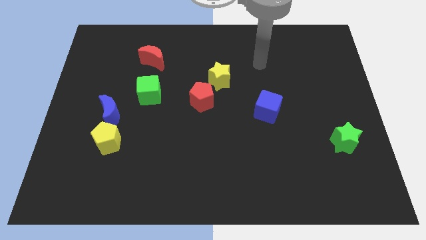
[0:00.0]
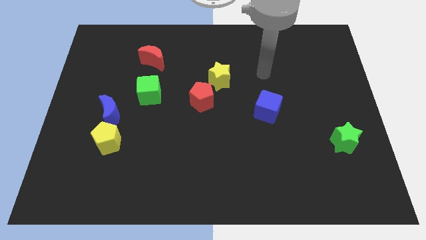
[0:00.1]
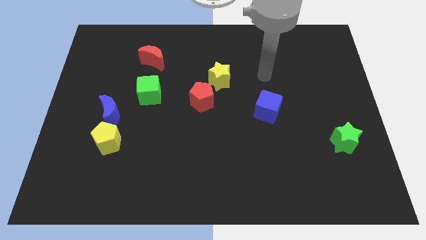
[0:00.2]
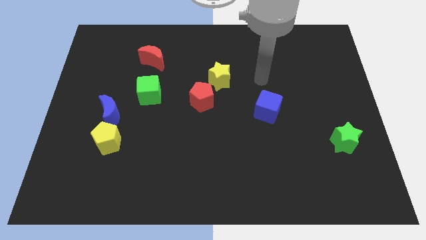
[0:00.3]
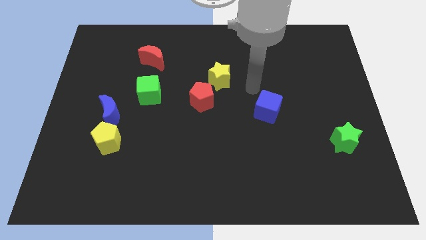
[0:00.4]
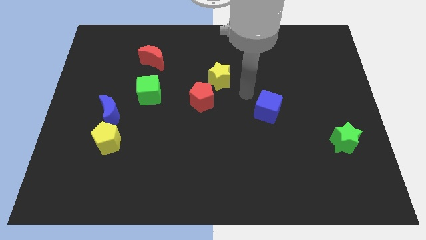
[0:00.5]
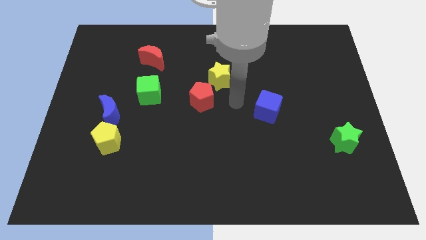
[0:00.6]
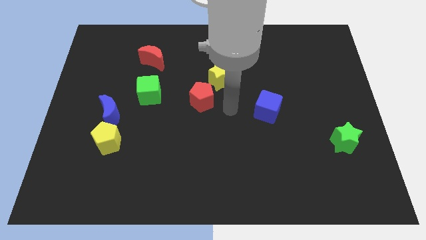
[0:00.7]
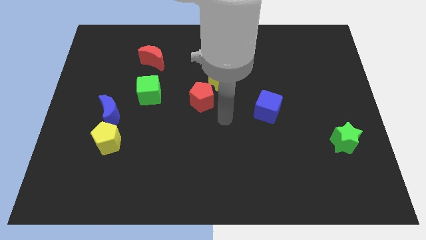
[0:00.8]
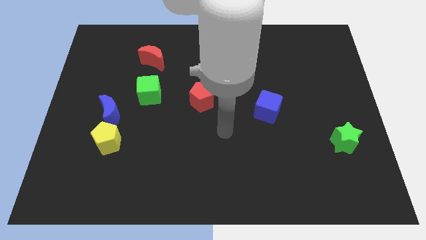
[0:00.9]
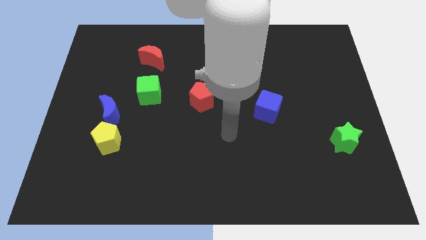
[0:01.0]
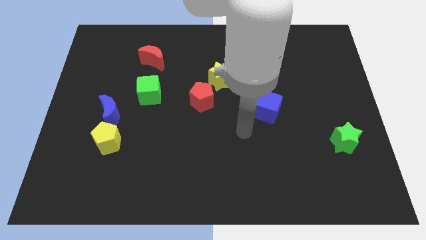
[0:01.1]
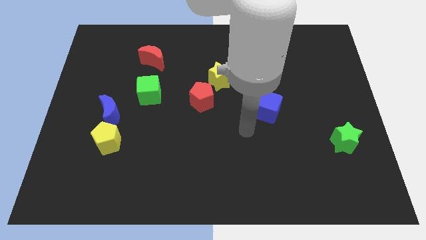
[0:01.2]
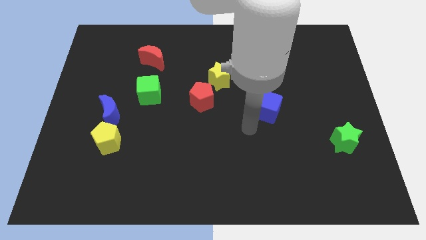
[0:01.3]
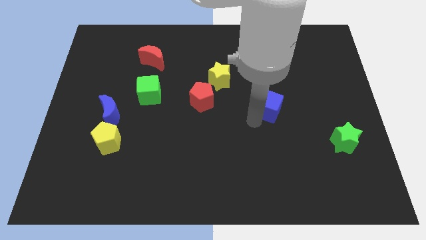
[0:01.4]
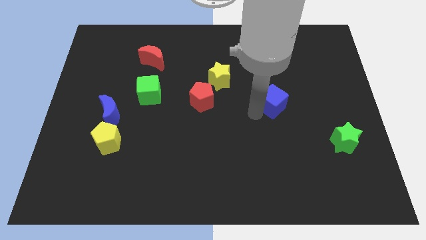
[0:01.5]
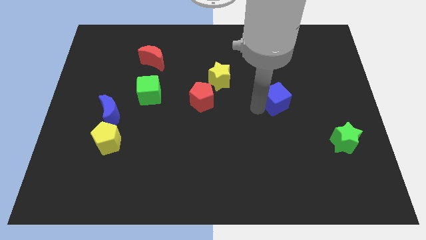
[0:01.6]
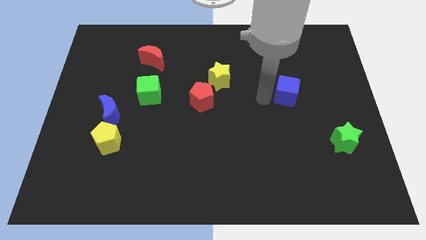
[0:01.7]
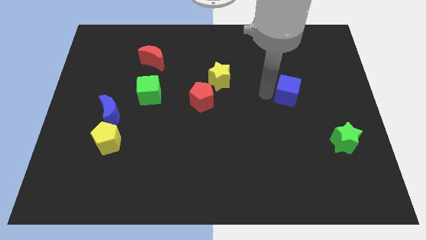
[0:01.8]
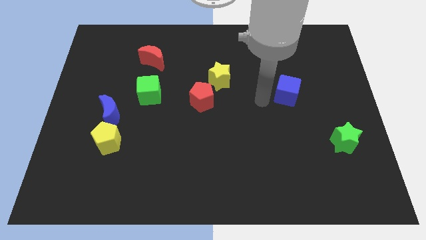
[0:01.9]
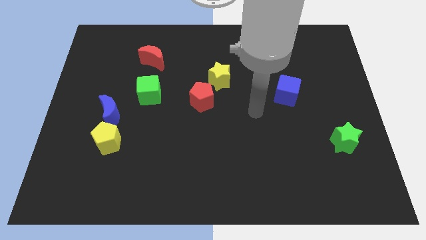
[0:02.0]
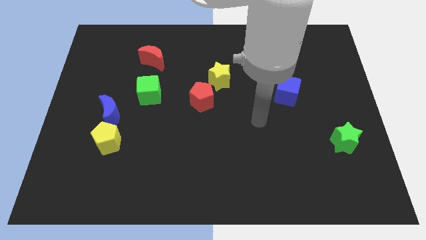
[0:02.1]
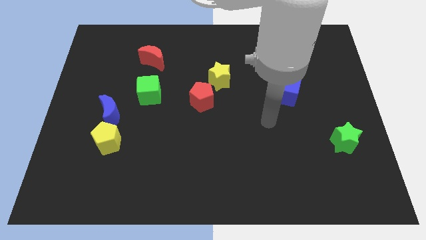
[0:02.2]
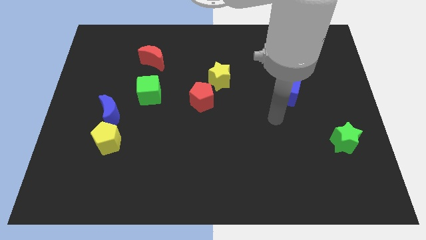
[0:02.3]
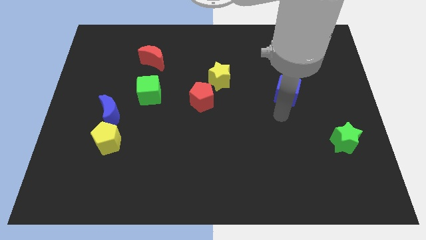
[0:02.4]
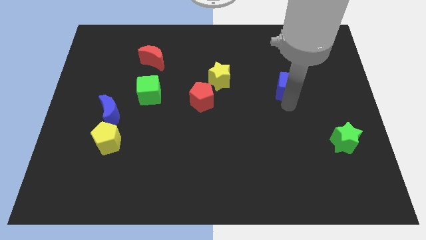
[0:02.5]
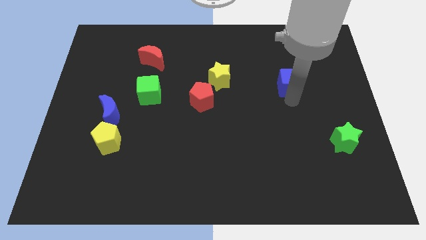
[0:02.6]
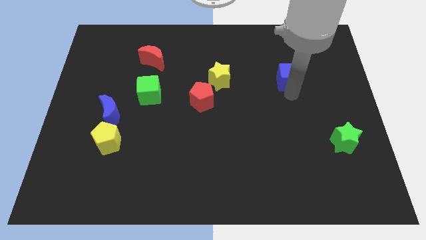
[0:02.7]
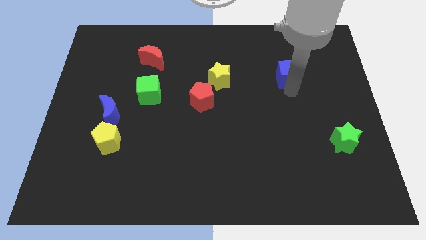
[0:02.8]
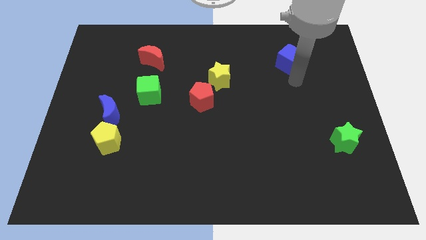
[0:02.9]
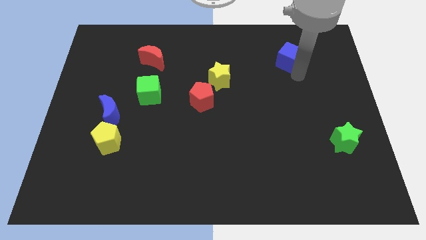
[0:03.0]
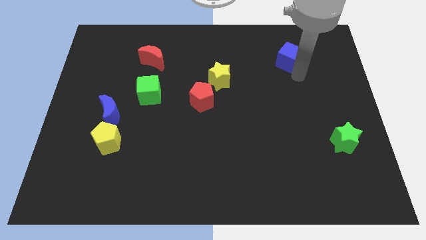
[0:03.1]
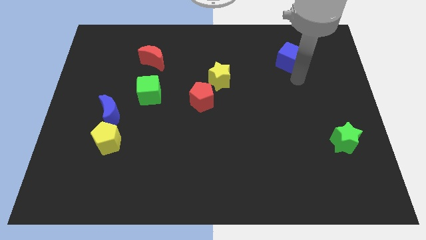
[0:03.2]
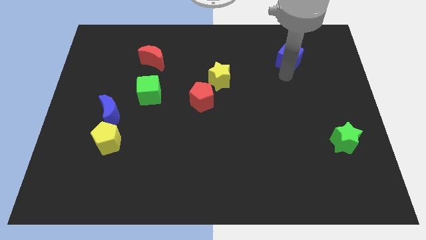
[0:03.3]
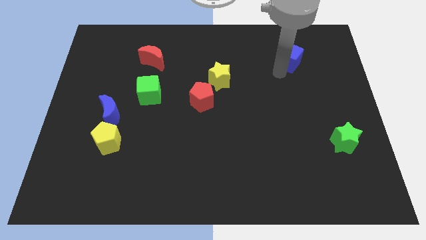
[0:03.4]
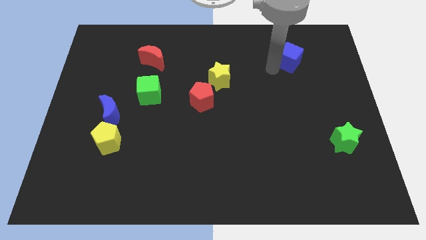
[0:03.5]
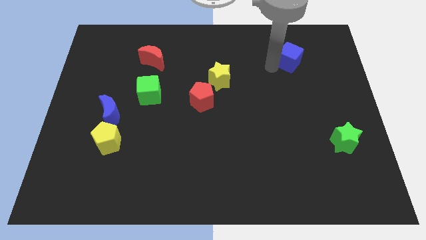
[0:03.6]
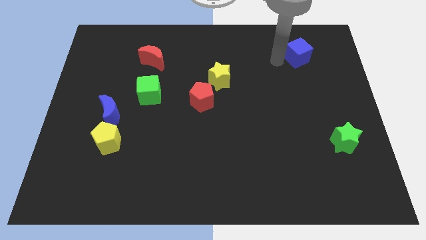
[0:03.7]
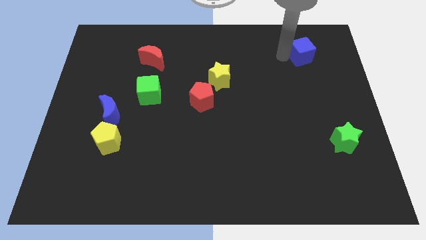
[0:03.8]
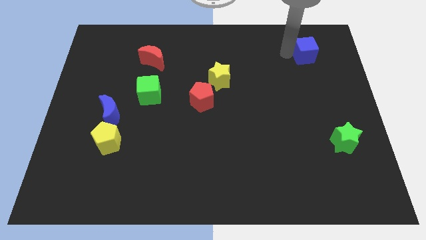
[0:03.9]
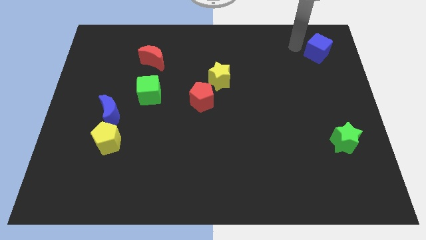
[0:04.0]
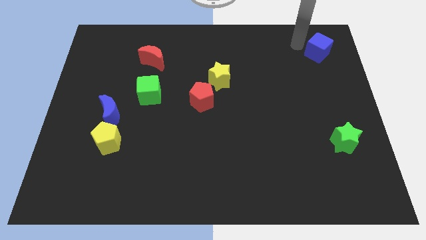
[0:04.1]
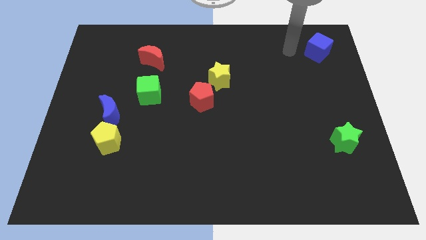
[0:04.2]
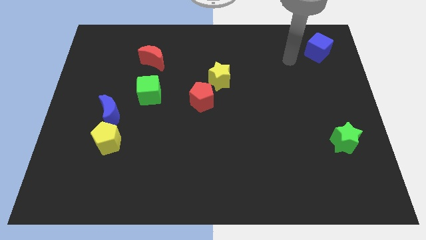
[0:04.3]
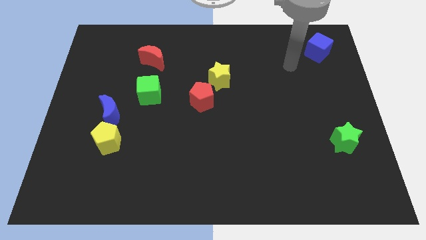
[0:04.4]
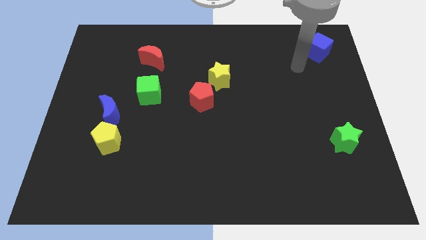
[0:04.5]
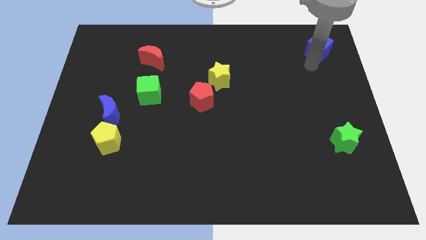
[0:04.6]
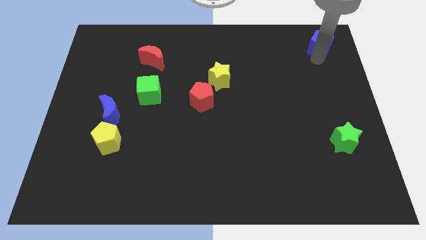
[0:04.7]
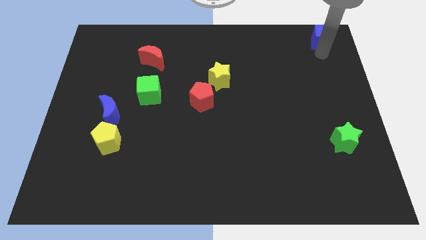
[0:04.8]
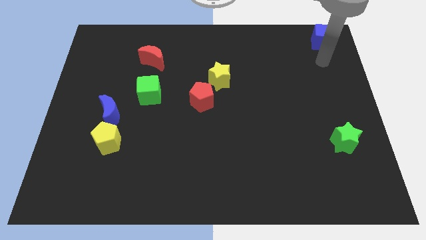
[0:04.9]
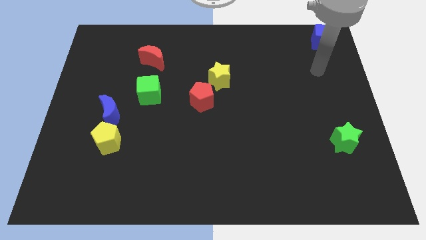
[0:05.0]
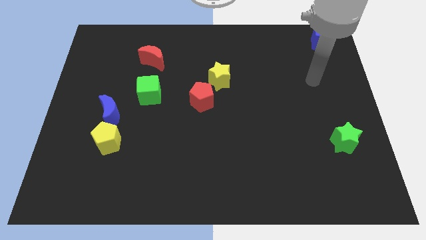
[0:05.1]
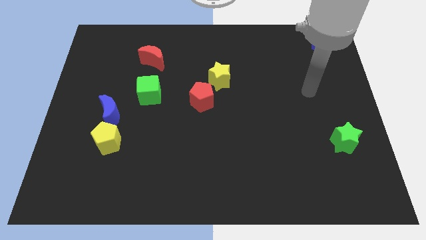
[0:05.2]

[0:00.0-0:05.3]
push the blue block towards the top right to the board

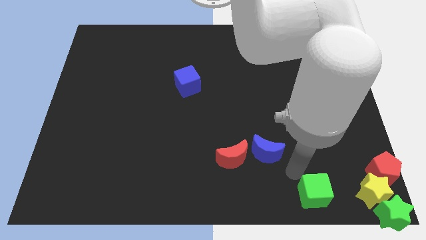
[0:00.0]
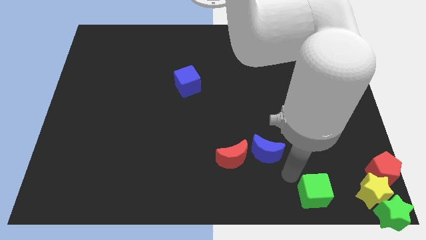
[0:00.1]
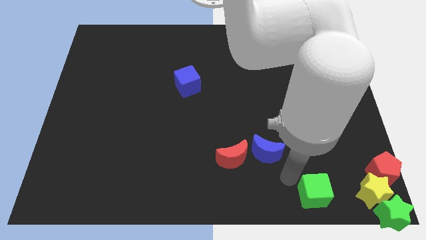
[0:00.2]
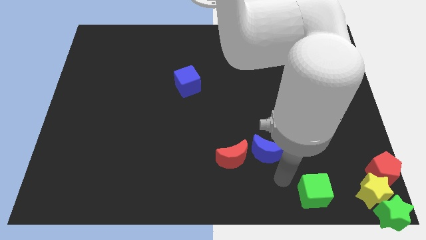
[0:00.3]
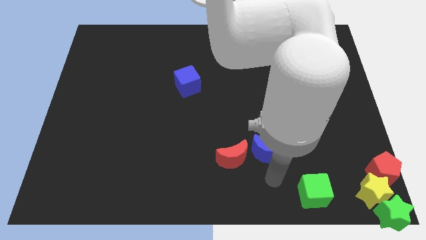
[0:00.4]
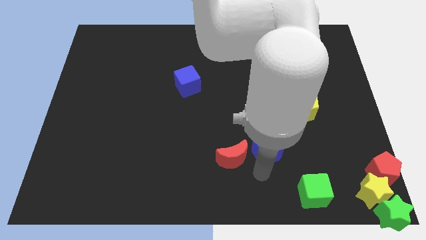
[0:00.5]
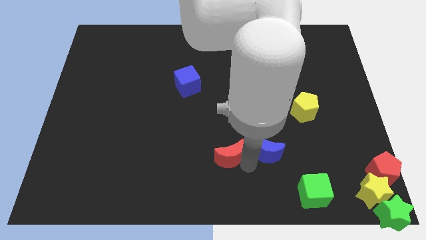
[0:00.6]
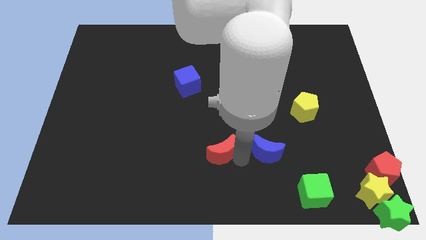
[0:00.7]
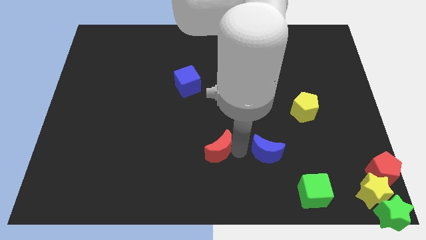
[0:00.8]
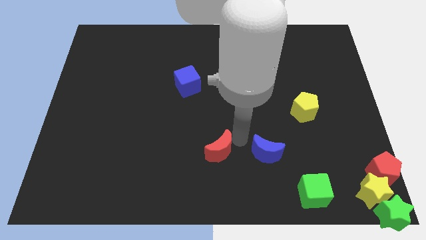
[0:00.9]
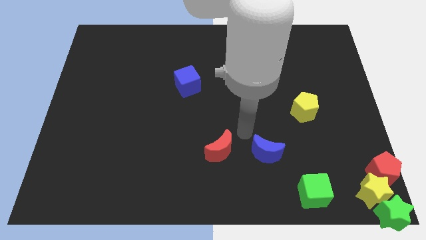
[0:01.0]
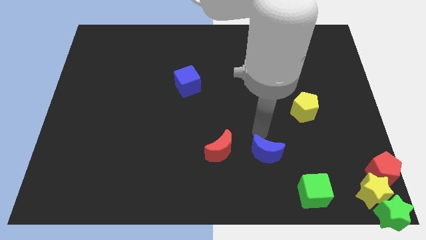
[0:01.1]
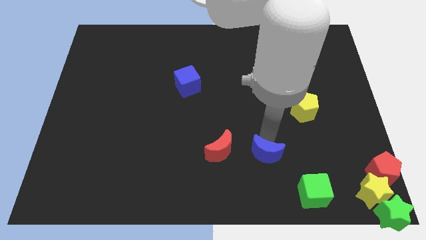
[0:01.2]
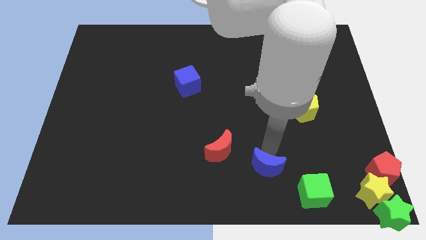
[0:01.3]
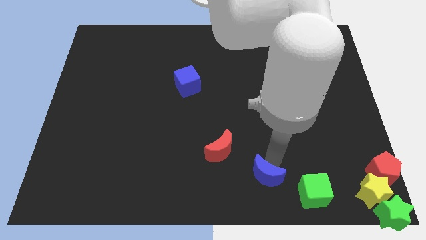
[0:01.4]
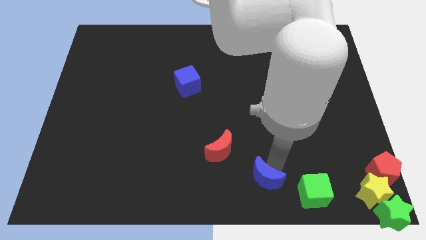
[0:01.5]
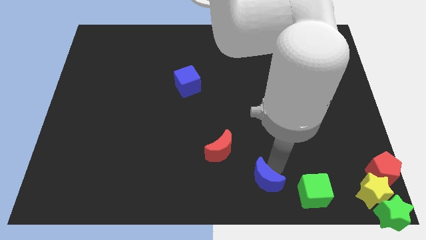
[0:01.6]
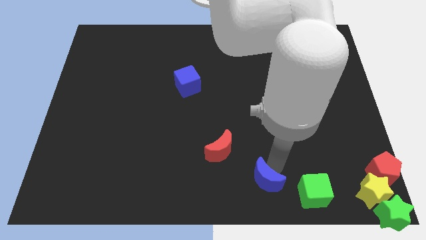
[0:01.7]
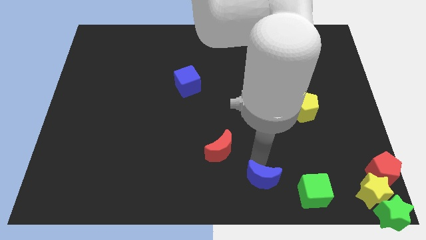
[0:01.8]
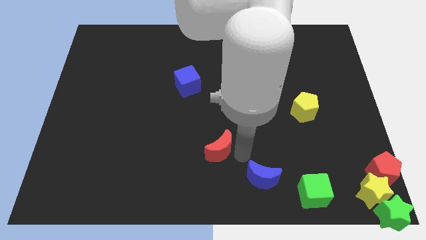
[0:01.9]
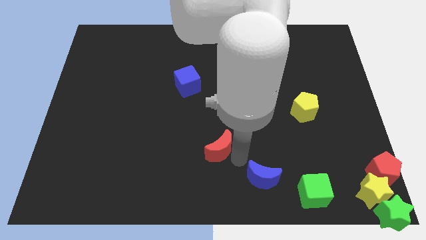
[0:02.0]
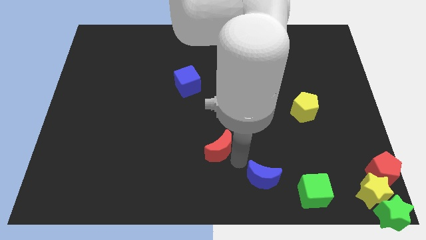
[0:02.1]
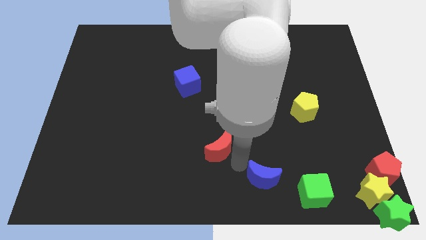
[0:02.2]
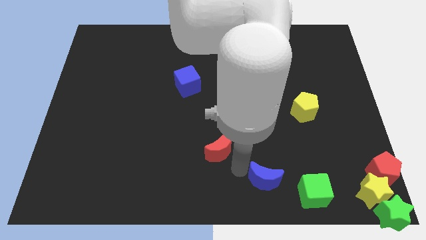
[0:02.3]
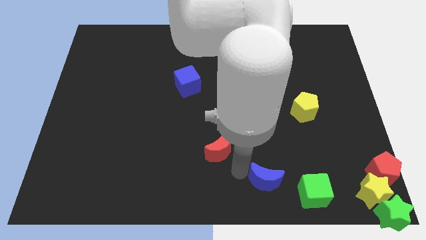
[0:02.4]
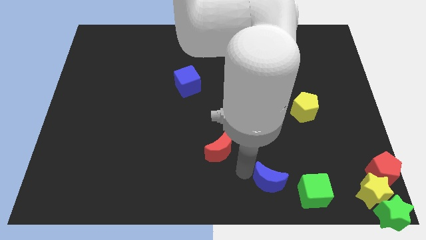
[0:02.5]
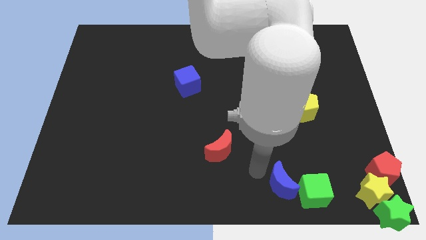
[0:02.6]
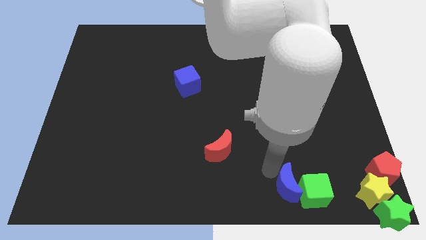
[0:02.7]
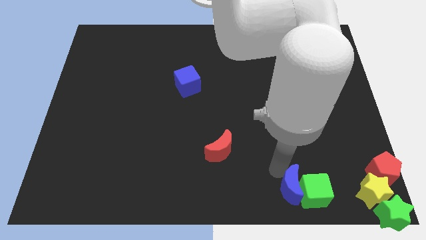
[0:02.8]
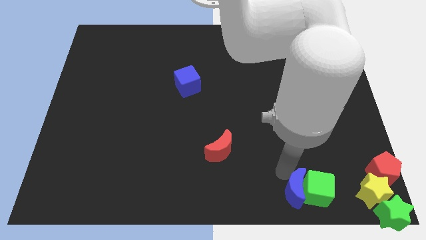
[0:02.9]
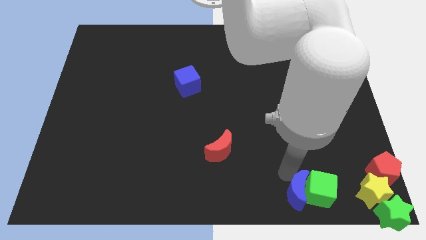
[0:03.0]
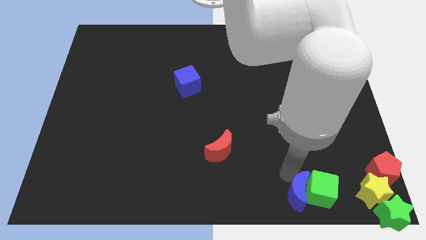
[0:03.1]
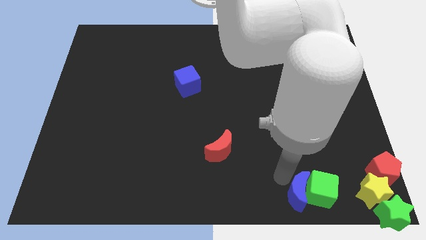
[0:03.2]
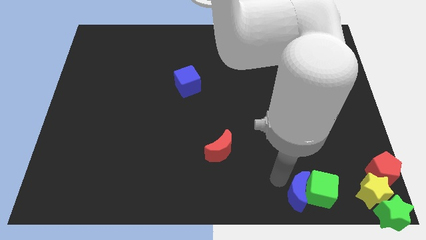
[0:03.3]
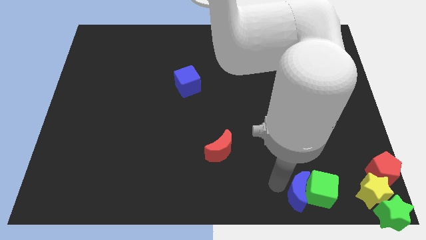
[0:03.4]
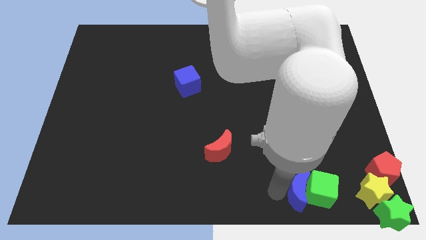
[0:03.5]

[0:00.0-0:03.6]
push the blue crescent to the left of the green cube

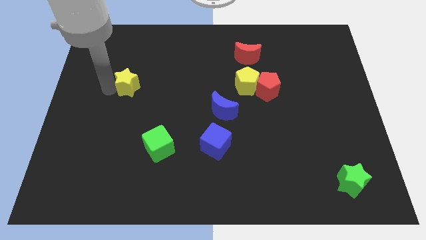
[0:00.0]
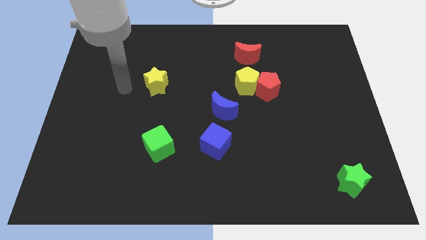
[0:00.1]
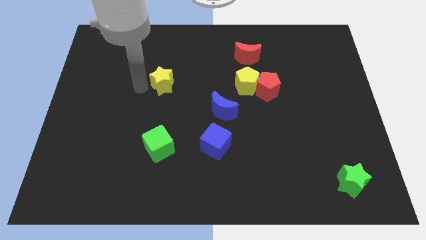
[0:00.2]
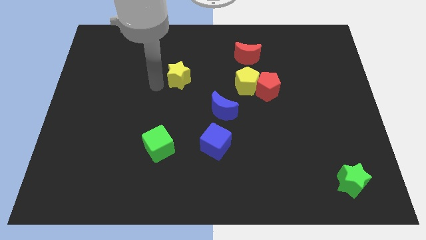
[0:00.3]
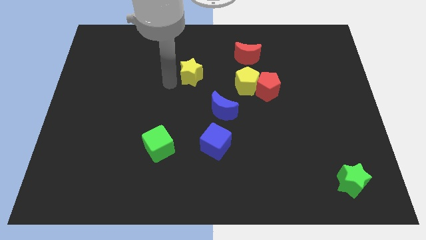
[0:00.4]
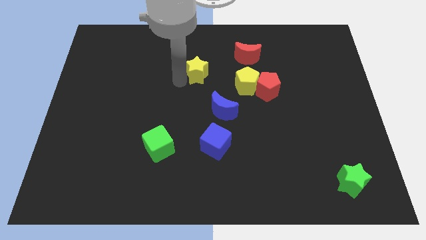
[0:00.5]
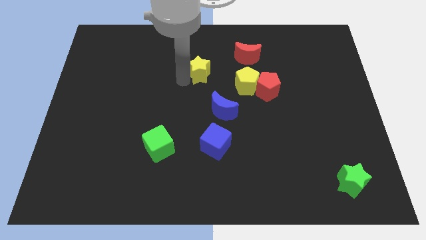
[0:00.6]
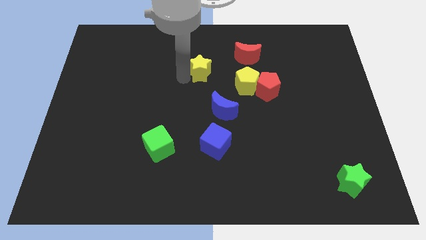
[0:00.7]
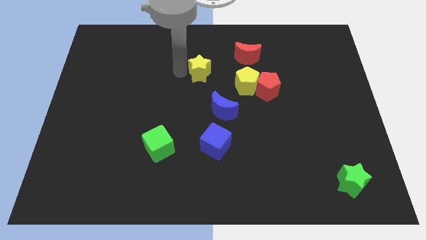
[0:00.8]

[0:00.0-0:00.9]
place the yellow star above the blue moon
